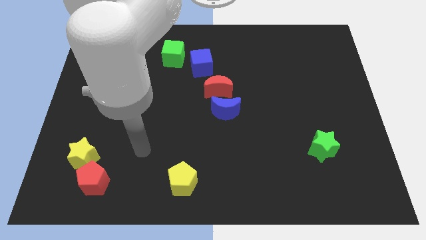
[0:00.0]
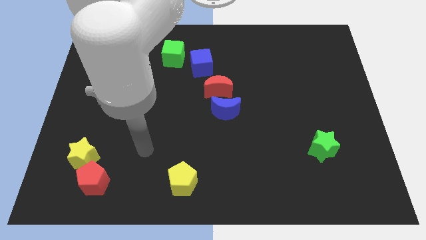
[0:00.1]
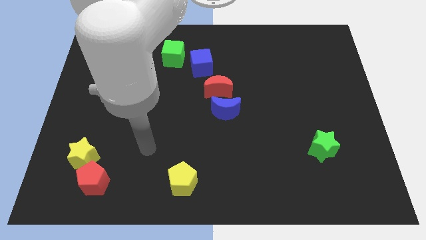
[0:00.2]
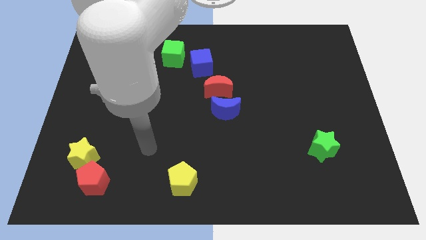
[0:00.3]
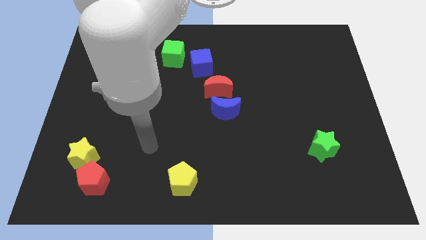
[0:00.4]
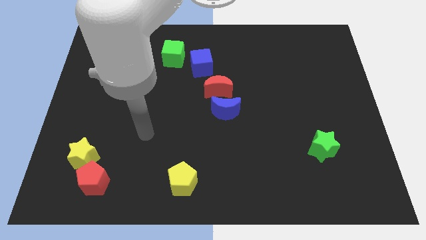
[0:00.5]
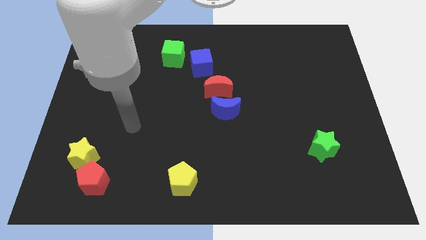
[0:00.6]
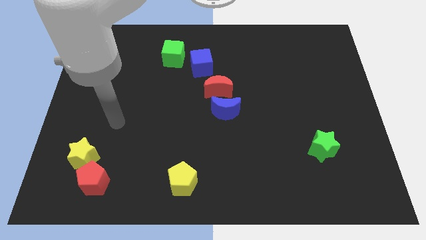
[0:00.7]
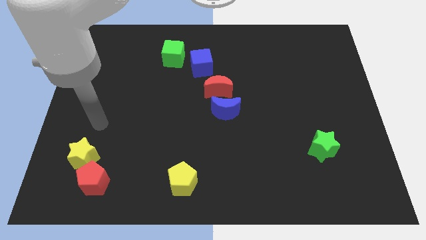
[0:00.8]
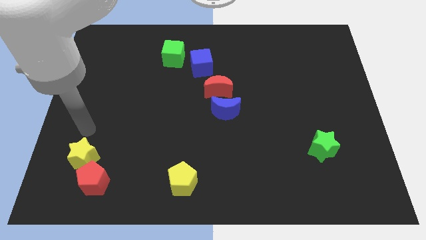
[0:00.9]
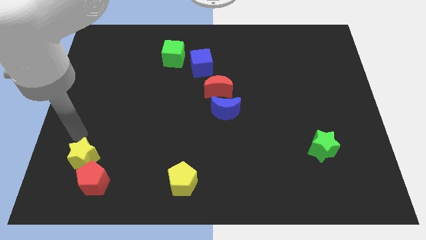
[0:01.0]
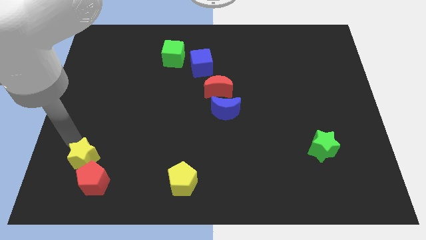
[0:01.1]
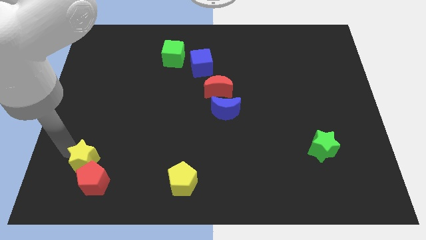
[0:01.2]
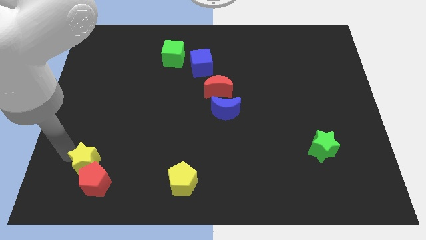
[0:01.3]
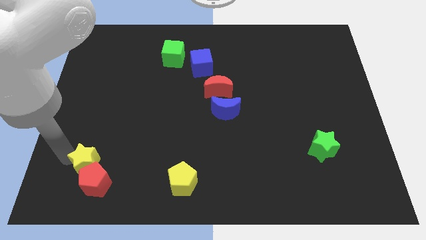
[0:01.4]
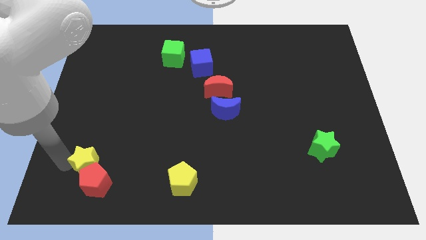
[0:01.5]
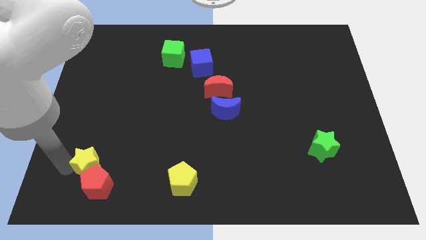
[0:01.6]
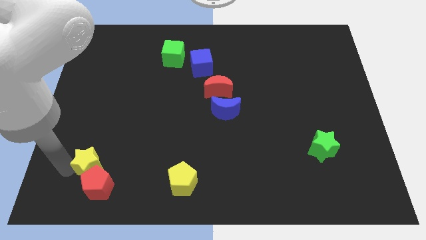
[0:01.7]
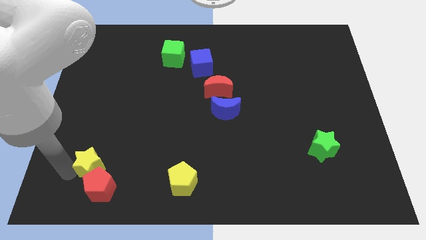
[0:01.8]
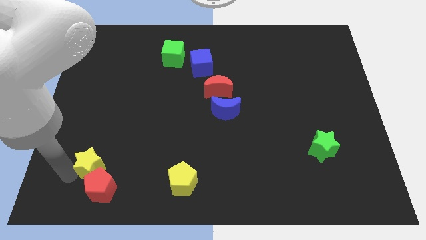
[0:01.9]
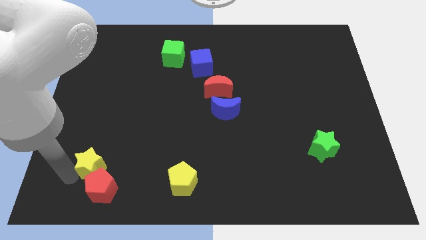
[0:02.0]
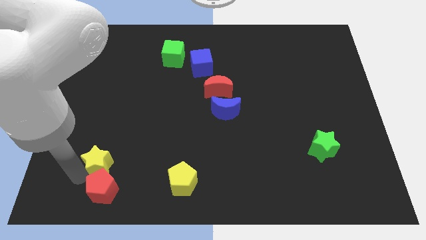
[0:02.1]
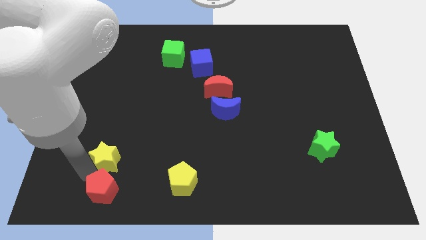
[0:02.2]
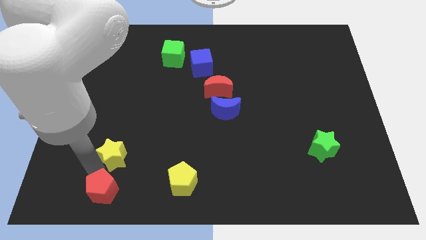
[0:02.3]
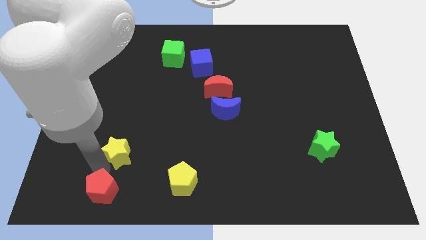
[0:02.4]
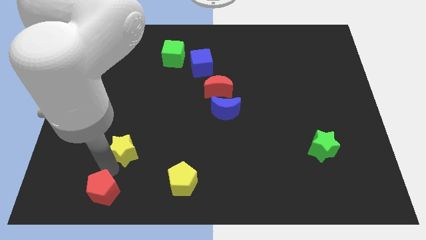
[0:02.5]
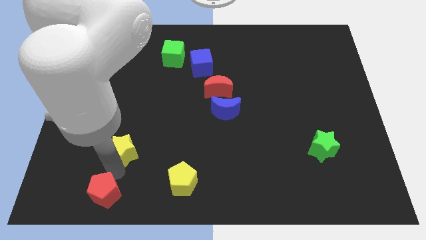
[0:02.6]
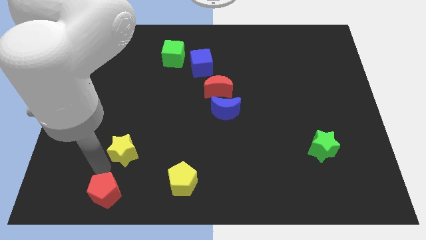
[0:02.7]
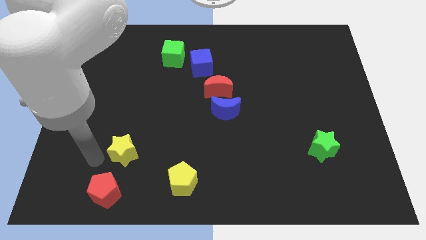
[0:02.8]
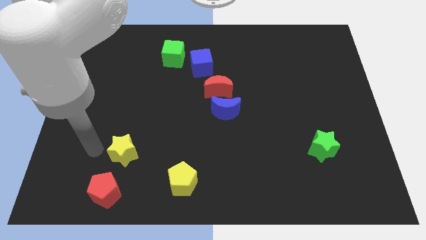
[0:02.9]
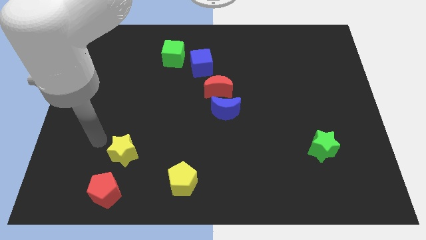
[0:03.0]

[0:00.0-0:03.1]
move the yellow star to the top right of the red pentagon

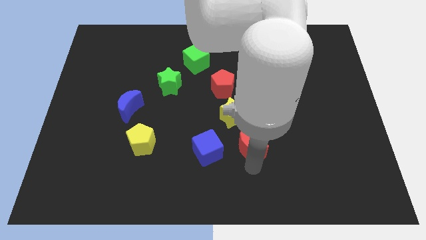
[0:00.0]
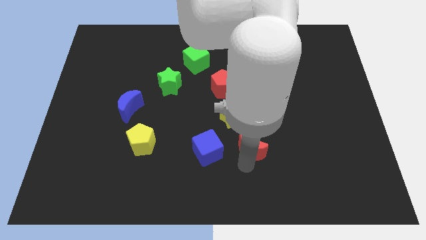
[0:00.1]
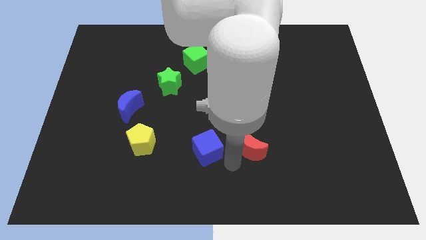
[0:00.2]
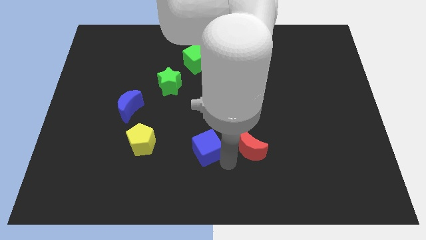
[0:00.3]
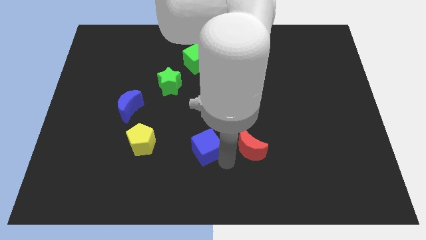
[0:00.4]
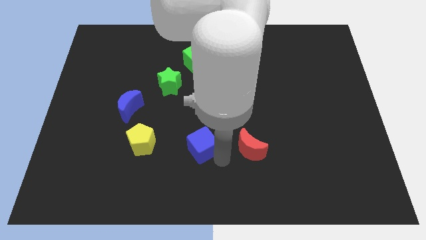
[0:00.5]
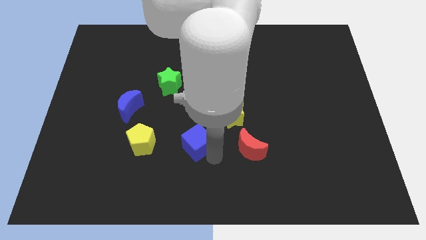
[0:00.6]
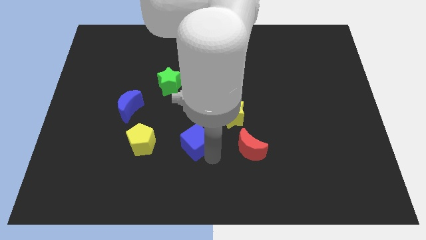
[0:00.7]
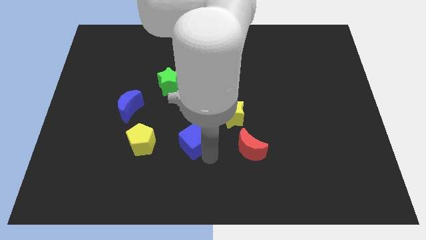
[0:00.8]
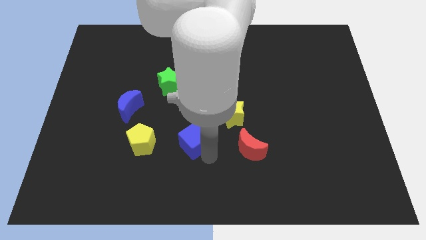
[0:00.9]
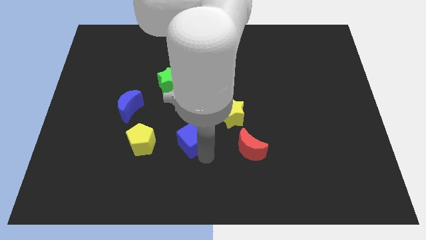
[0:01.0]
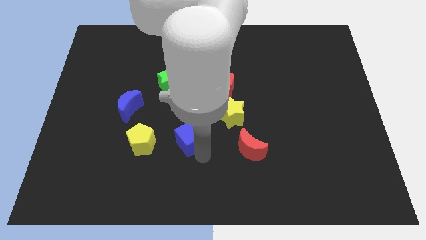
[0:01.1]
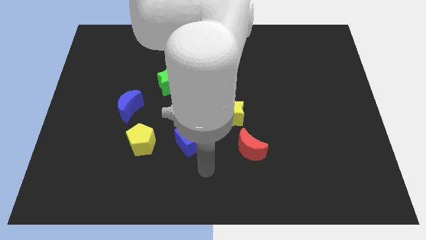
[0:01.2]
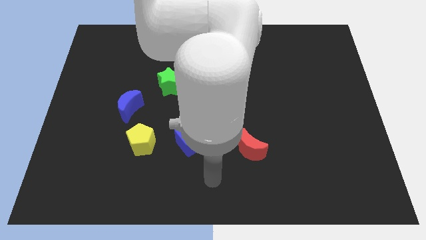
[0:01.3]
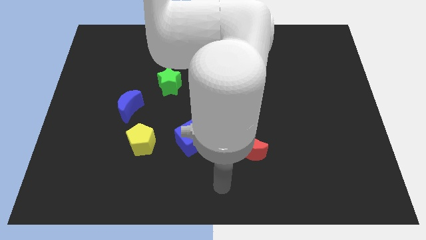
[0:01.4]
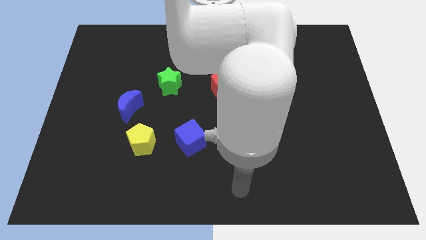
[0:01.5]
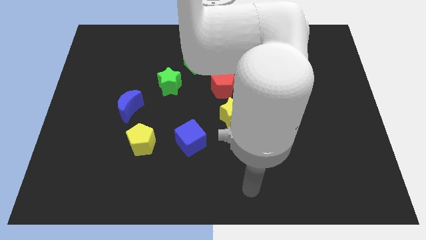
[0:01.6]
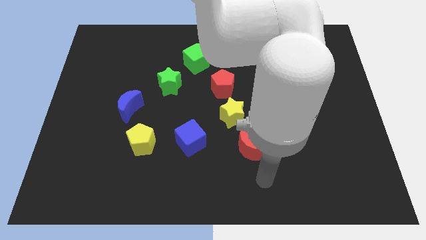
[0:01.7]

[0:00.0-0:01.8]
place blue cube to the right of the yellow pentagon

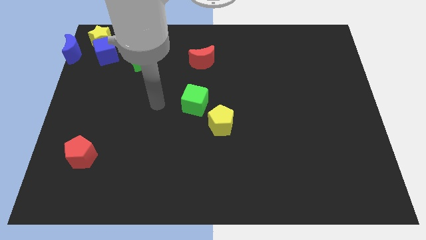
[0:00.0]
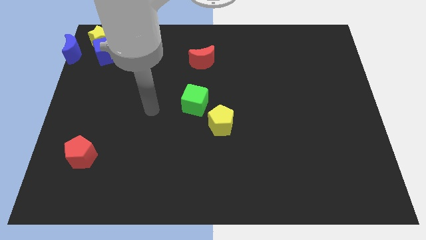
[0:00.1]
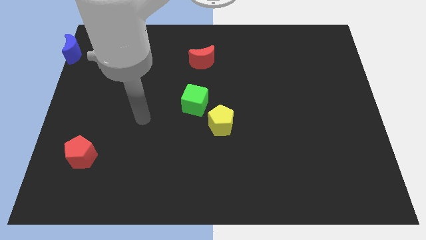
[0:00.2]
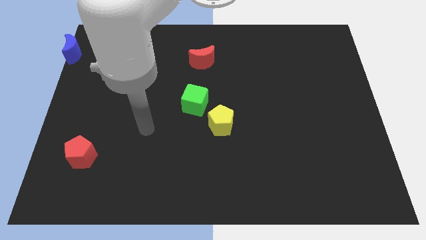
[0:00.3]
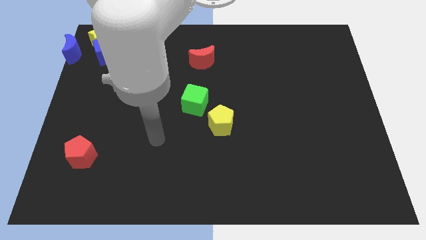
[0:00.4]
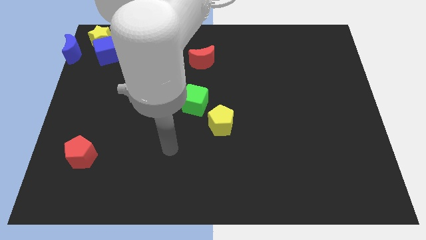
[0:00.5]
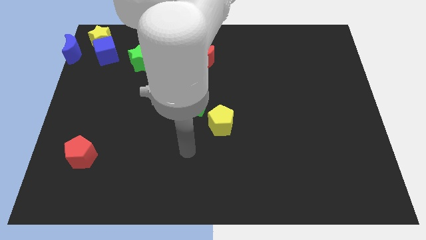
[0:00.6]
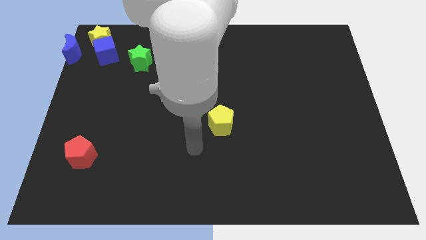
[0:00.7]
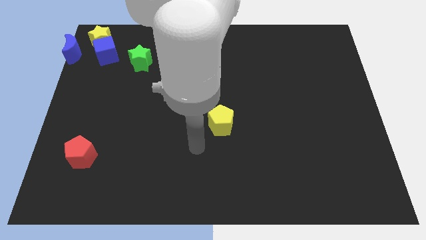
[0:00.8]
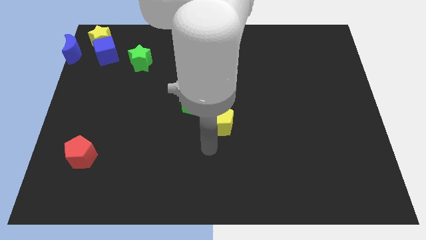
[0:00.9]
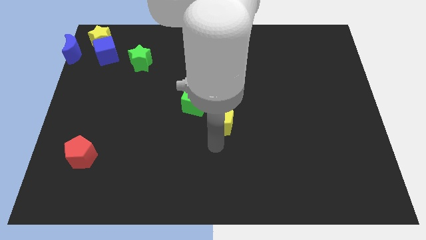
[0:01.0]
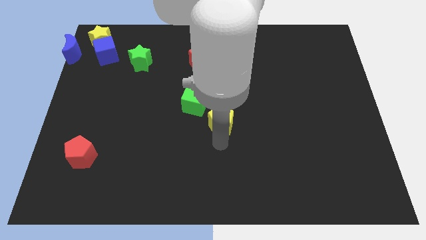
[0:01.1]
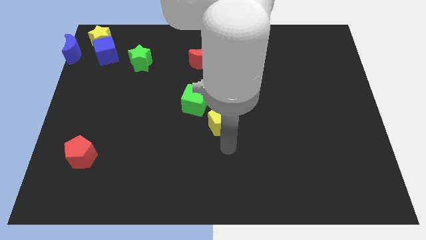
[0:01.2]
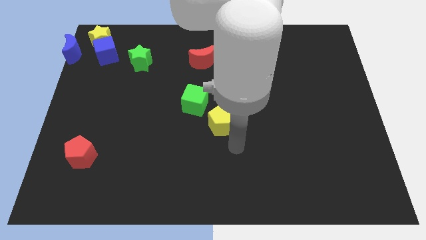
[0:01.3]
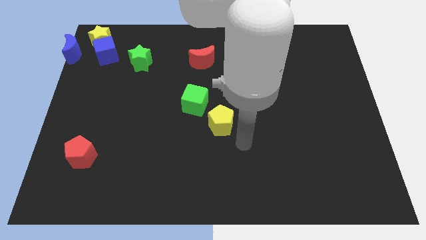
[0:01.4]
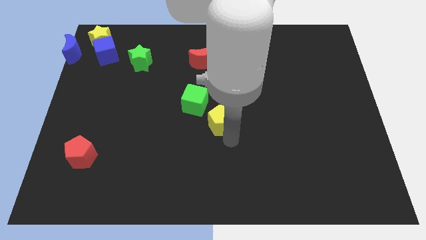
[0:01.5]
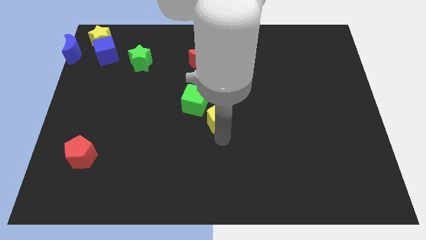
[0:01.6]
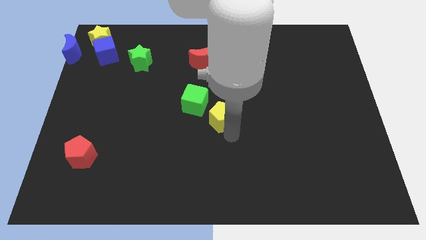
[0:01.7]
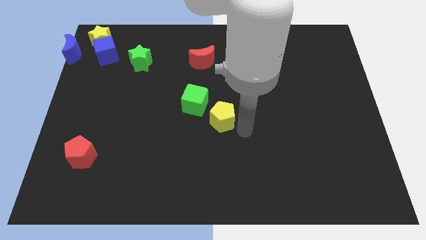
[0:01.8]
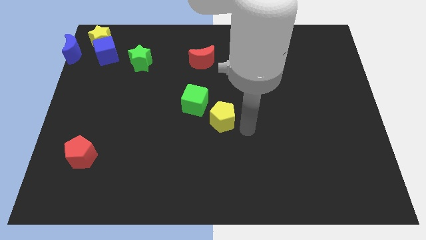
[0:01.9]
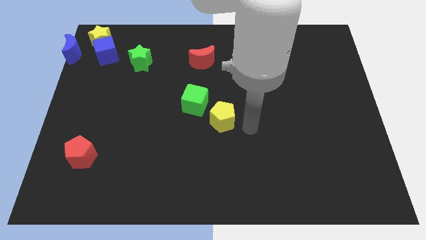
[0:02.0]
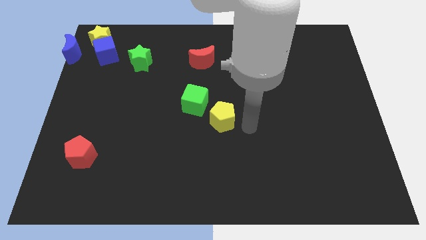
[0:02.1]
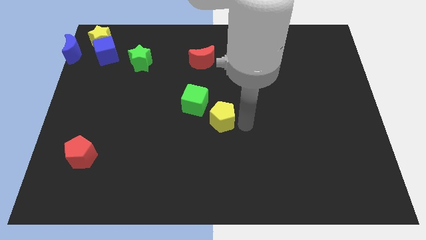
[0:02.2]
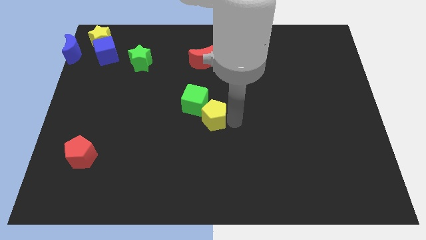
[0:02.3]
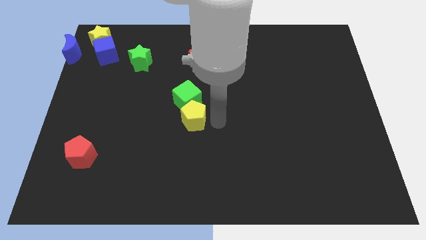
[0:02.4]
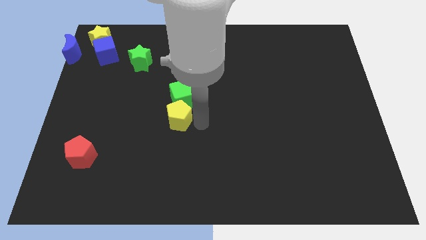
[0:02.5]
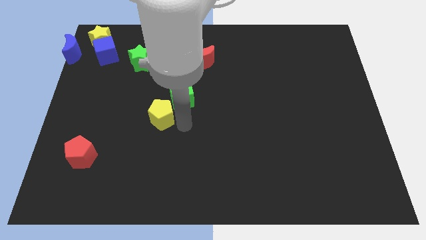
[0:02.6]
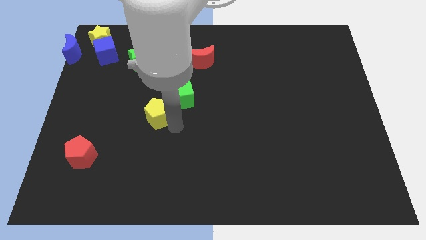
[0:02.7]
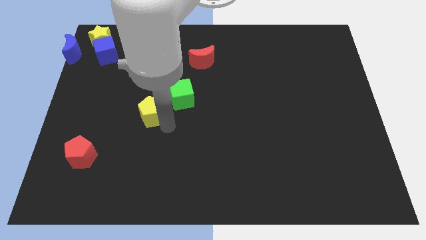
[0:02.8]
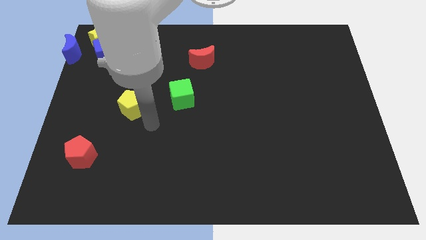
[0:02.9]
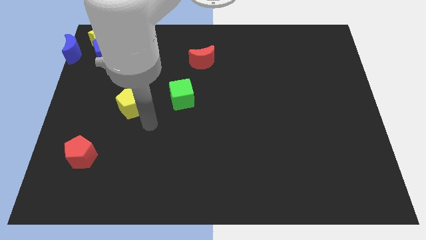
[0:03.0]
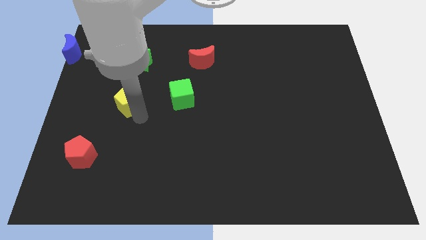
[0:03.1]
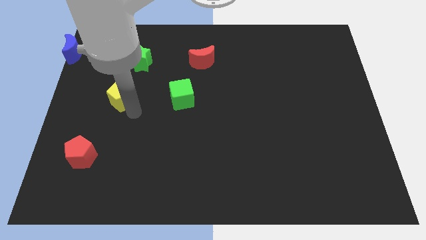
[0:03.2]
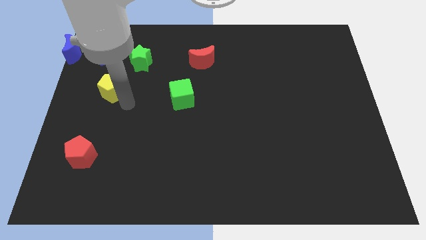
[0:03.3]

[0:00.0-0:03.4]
place the yellow pentagon left to the green cube

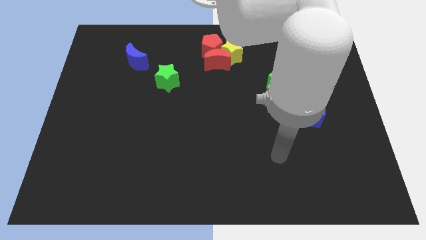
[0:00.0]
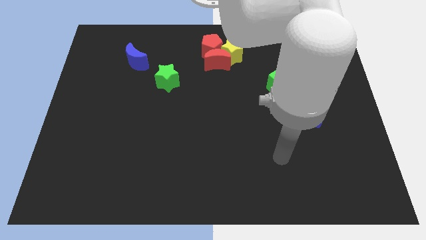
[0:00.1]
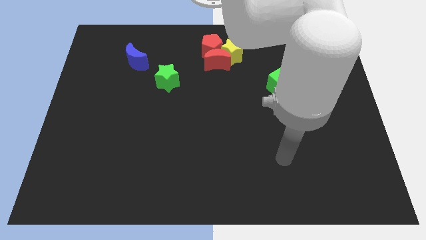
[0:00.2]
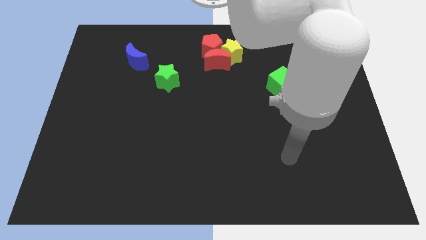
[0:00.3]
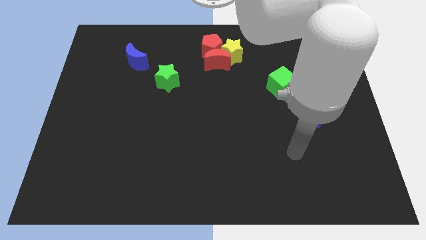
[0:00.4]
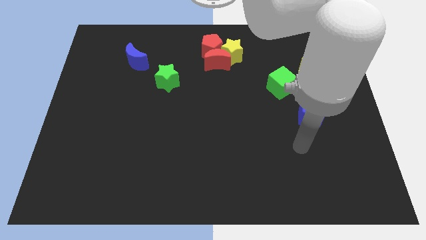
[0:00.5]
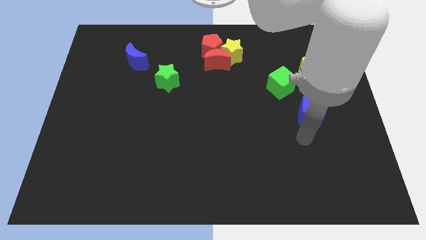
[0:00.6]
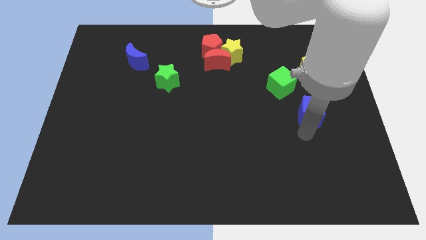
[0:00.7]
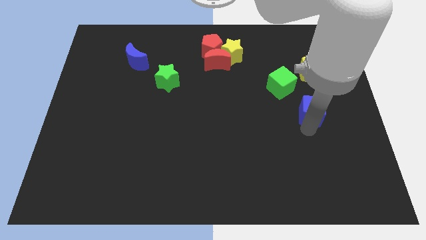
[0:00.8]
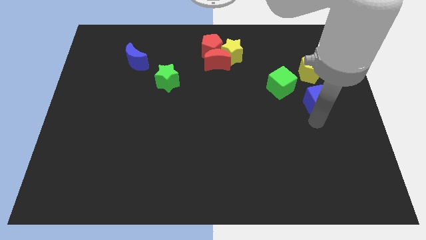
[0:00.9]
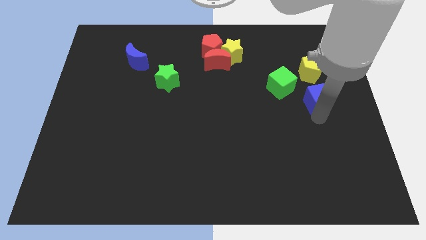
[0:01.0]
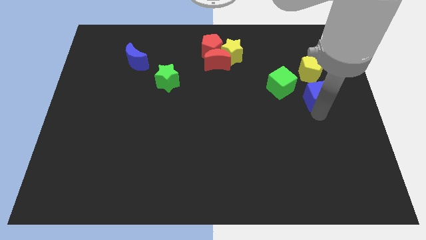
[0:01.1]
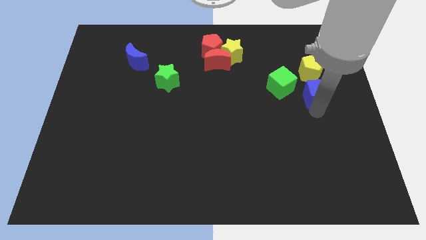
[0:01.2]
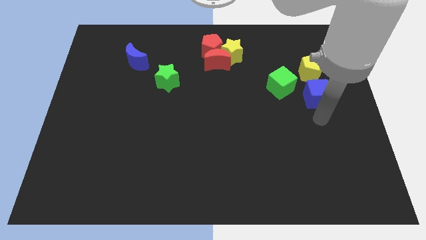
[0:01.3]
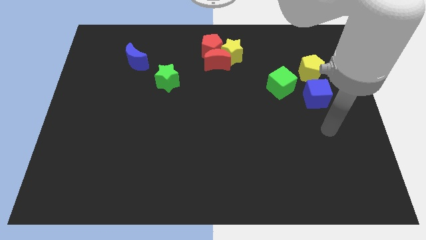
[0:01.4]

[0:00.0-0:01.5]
push the blue cube to the bottom of the yellow pentagon
